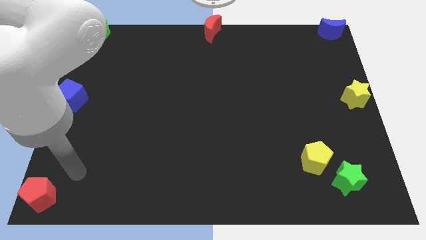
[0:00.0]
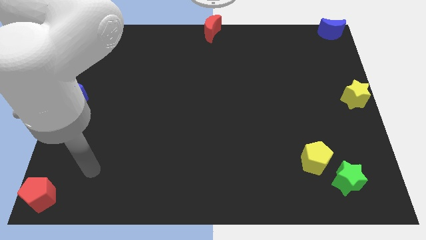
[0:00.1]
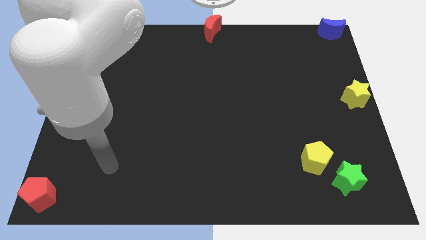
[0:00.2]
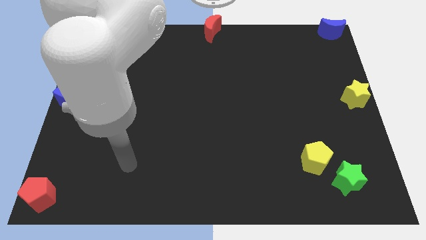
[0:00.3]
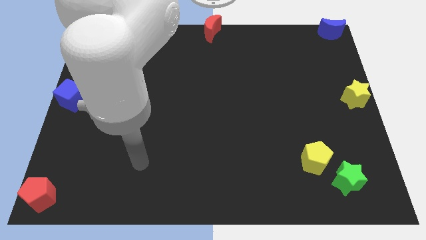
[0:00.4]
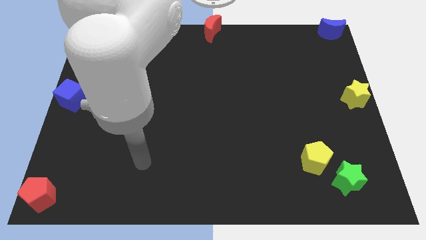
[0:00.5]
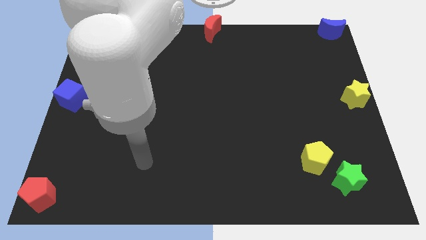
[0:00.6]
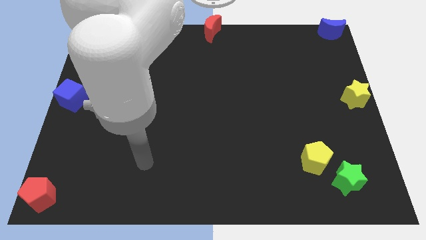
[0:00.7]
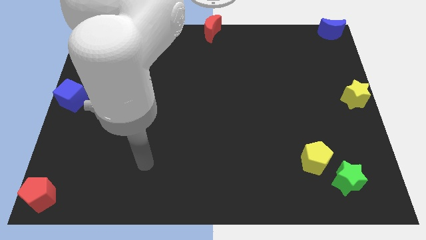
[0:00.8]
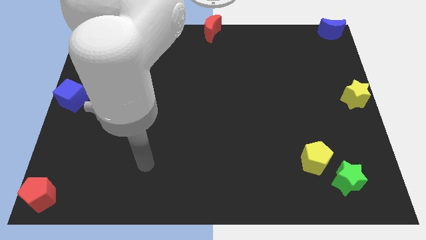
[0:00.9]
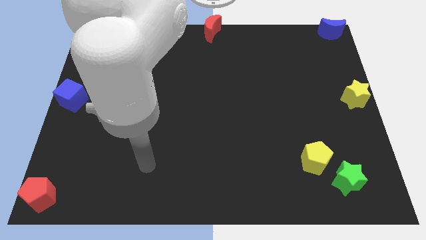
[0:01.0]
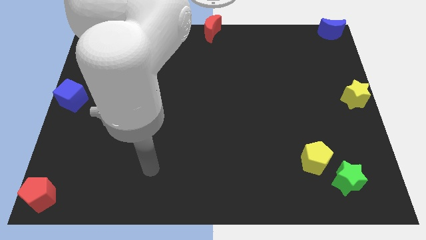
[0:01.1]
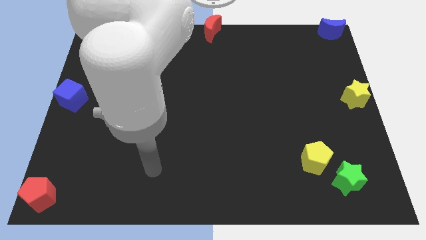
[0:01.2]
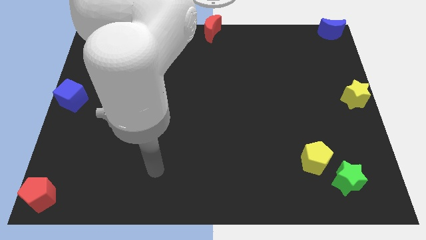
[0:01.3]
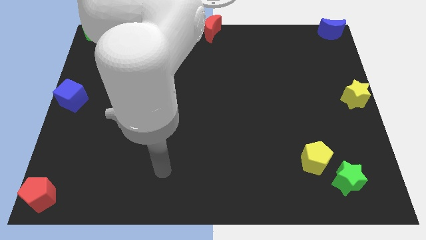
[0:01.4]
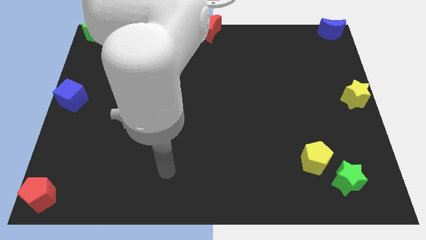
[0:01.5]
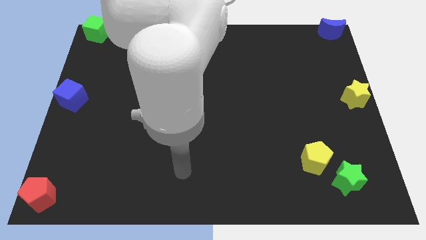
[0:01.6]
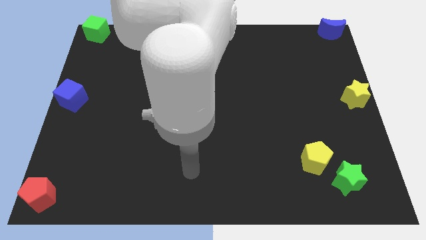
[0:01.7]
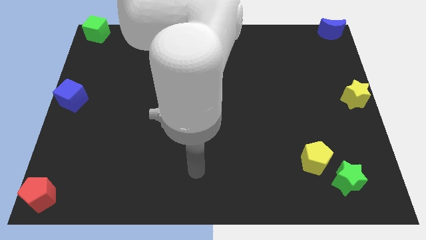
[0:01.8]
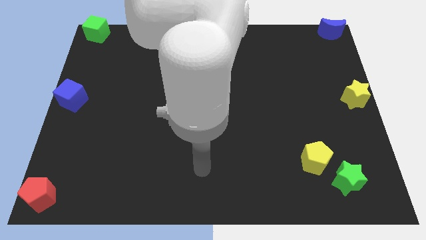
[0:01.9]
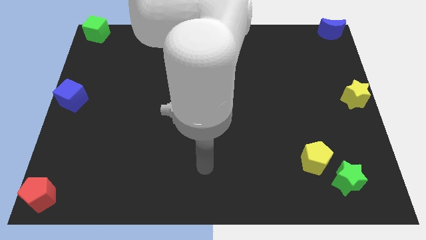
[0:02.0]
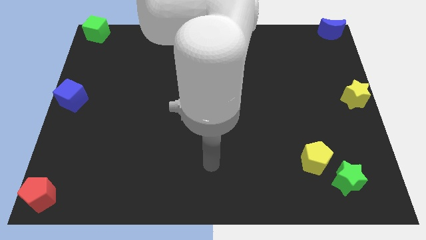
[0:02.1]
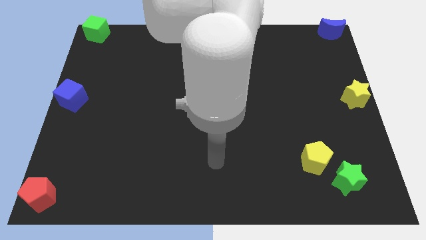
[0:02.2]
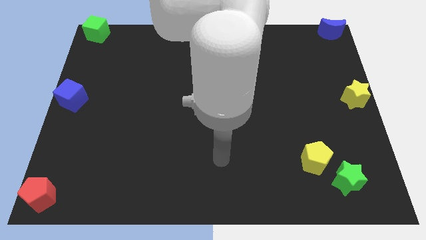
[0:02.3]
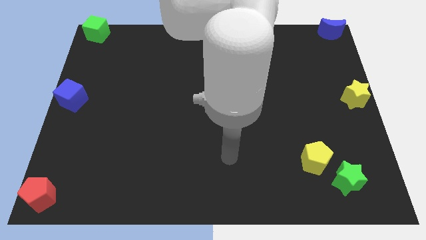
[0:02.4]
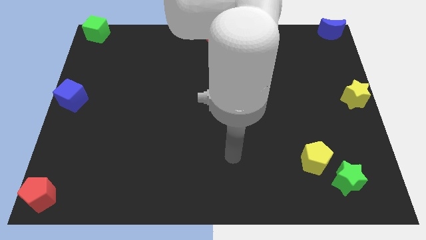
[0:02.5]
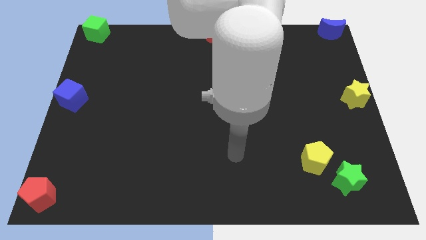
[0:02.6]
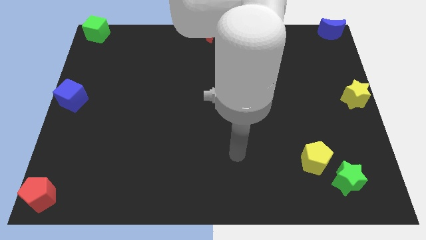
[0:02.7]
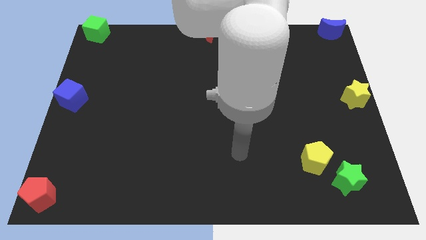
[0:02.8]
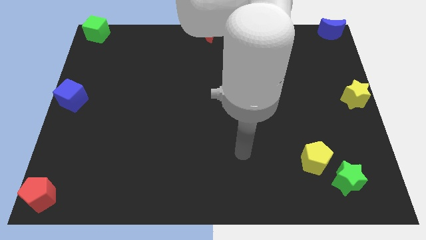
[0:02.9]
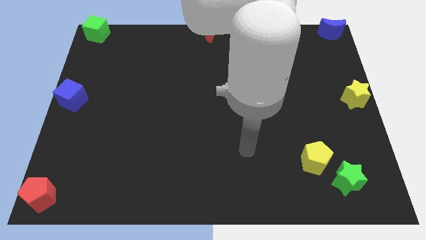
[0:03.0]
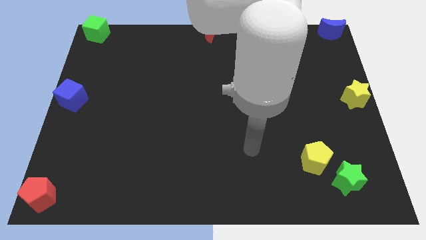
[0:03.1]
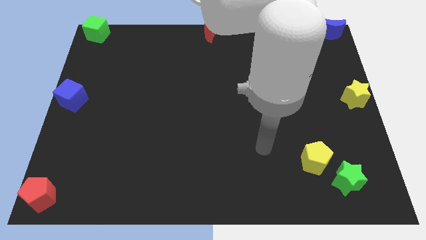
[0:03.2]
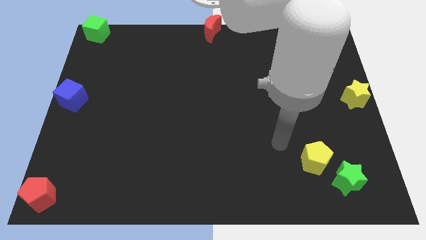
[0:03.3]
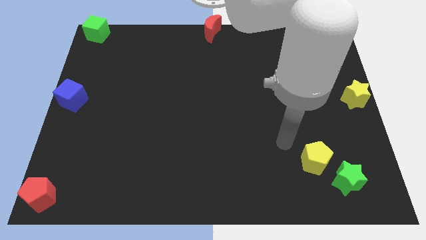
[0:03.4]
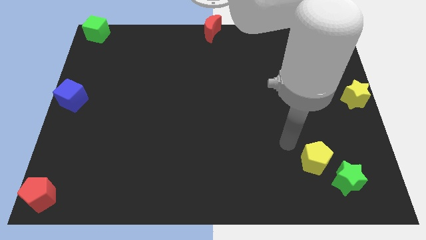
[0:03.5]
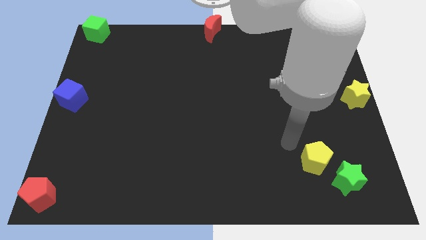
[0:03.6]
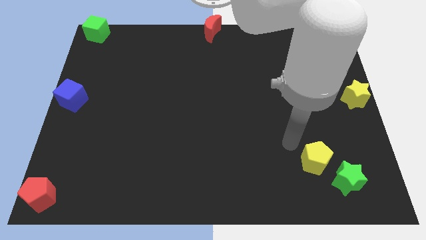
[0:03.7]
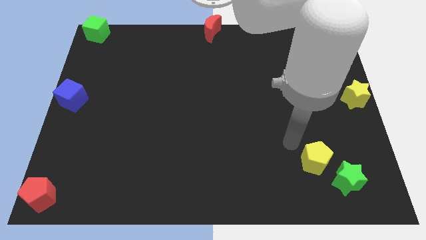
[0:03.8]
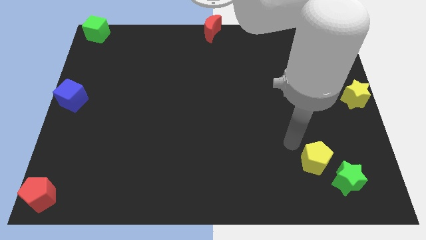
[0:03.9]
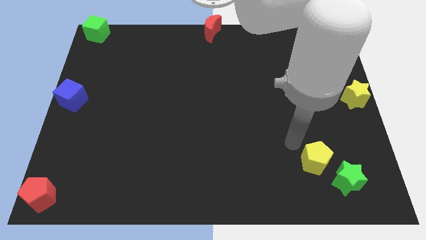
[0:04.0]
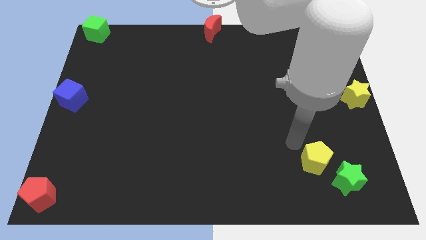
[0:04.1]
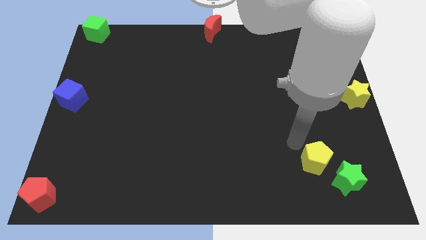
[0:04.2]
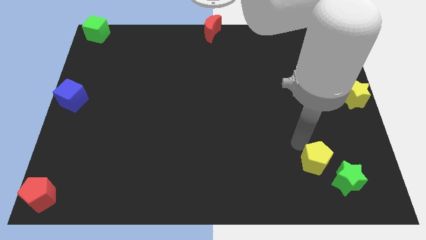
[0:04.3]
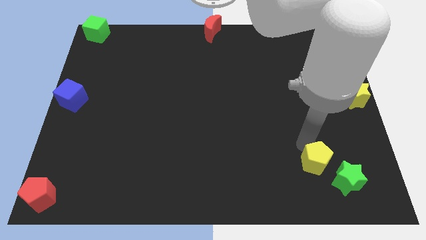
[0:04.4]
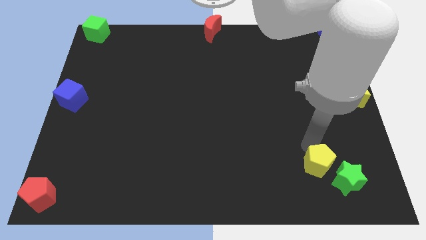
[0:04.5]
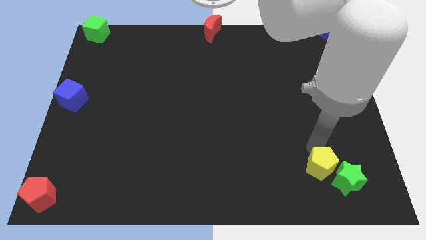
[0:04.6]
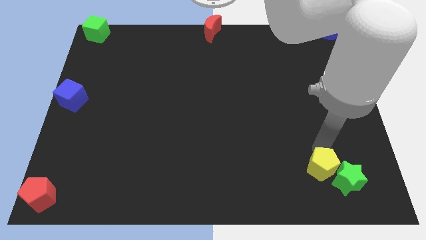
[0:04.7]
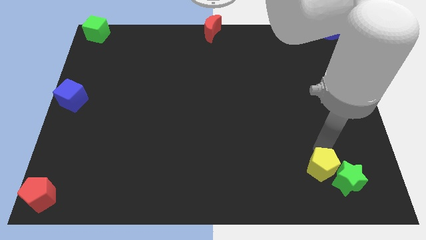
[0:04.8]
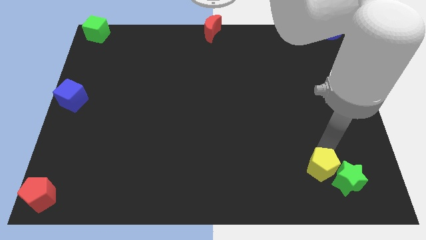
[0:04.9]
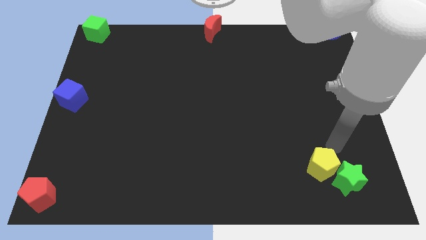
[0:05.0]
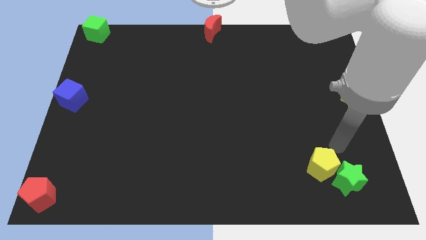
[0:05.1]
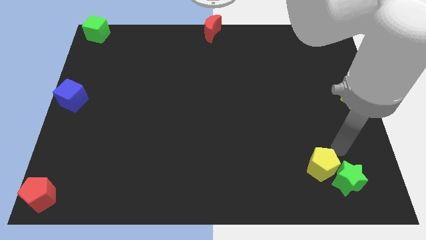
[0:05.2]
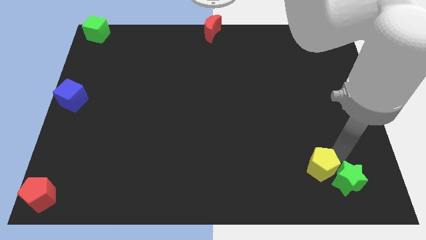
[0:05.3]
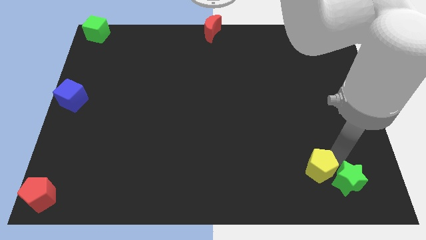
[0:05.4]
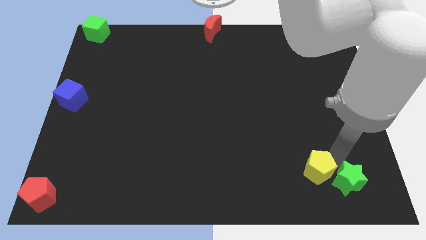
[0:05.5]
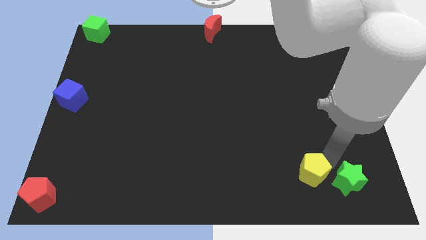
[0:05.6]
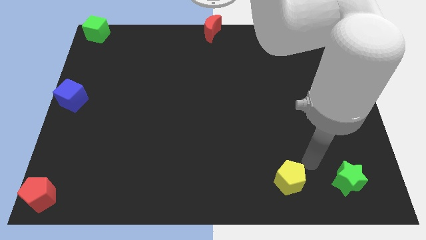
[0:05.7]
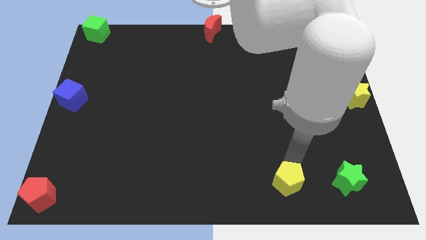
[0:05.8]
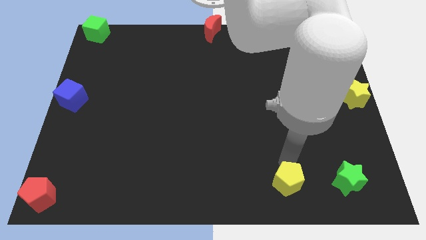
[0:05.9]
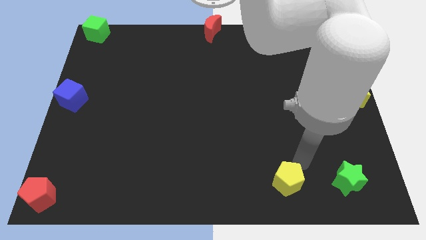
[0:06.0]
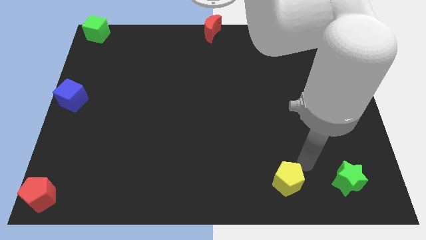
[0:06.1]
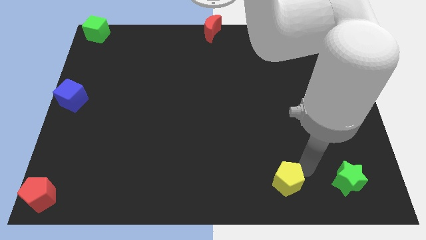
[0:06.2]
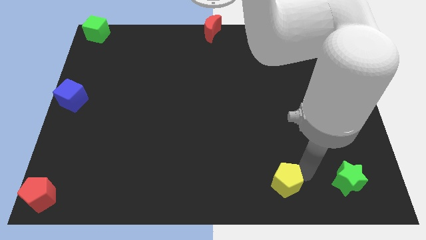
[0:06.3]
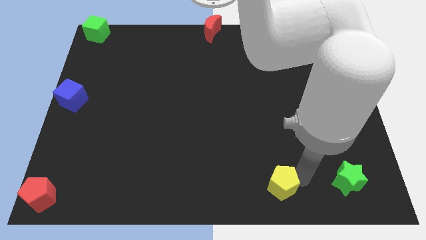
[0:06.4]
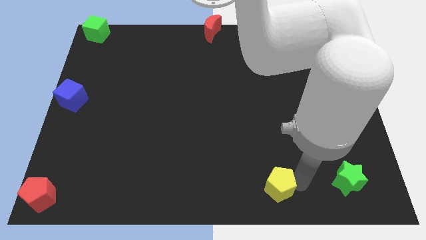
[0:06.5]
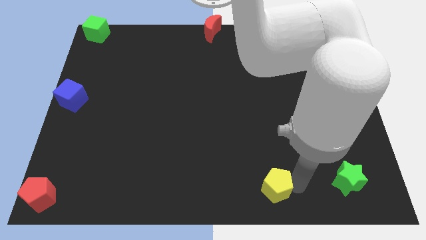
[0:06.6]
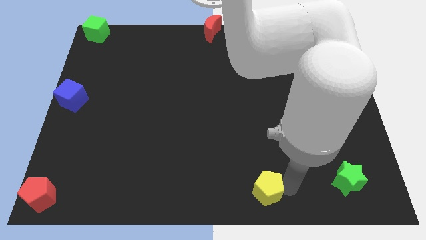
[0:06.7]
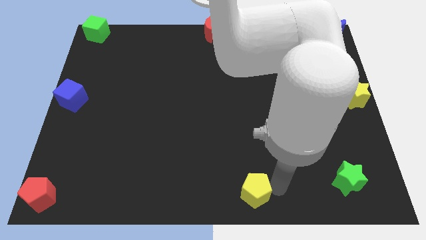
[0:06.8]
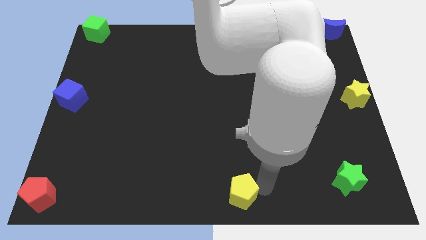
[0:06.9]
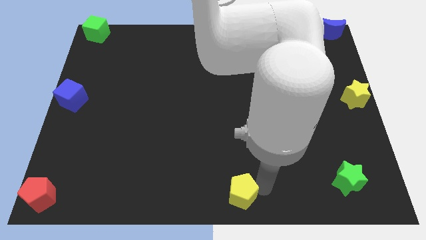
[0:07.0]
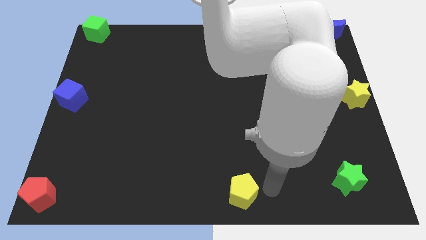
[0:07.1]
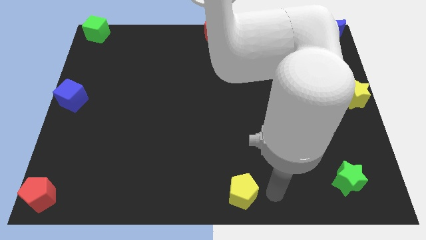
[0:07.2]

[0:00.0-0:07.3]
push the yellow pentagon to the bottom center of the board

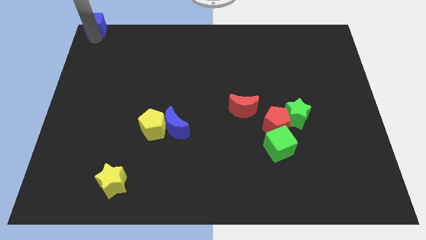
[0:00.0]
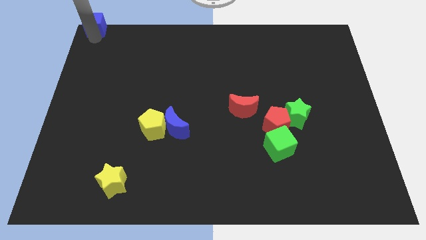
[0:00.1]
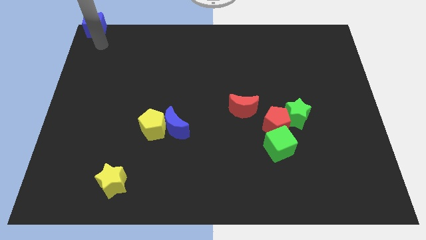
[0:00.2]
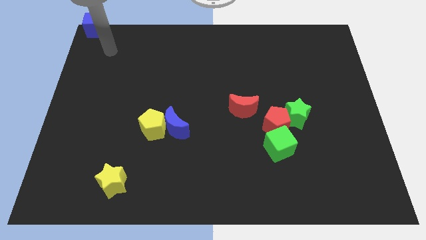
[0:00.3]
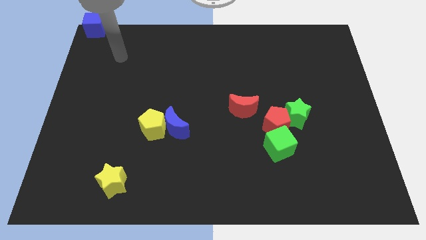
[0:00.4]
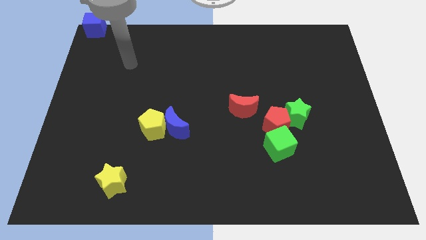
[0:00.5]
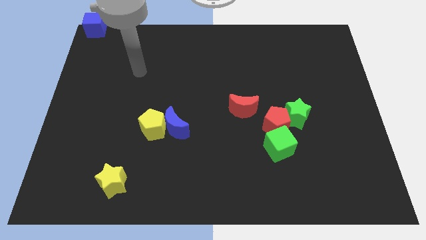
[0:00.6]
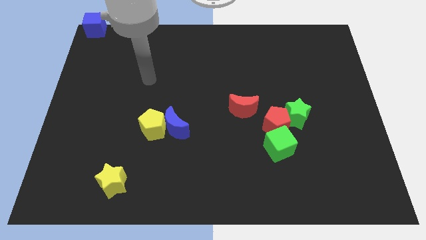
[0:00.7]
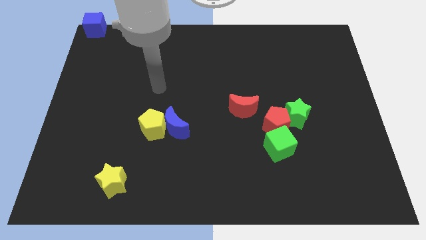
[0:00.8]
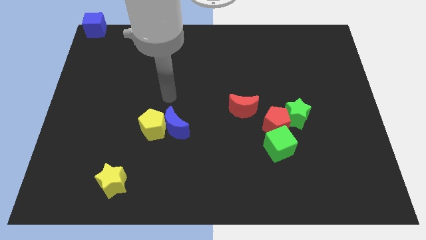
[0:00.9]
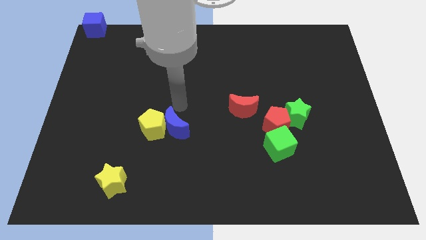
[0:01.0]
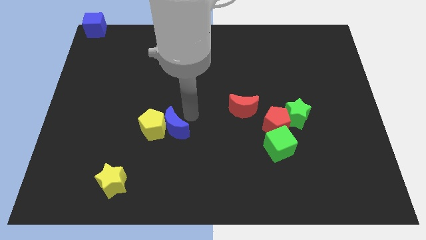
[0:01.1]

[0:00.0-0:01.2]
move the arm to the center of the board

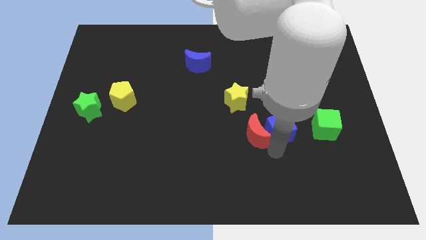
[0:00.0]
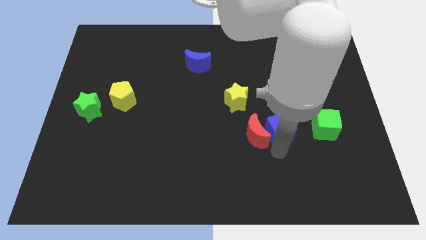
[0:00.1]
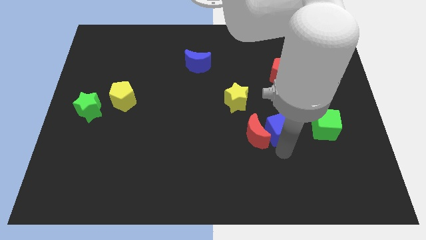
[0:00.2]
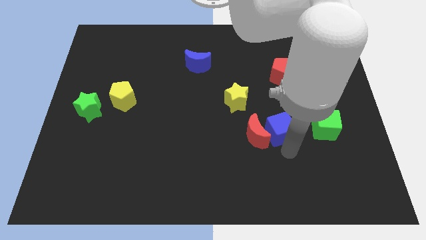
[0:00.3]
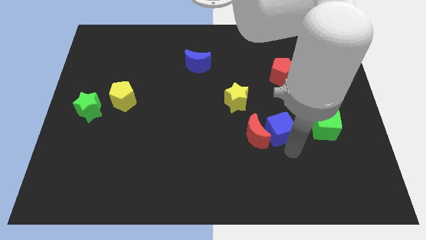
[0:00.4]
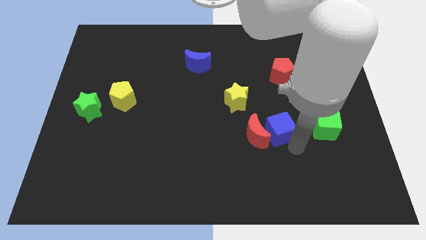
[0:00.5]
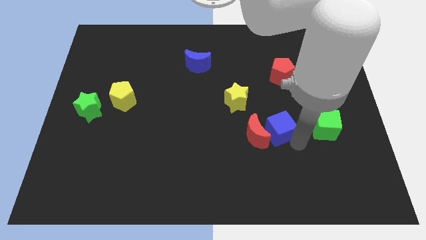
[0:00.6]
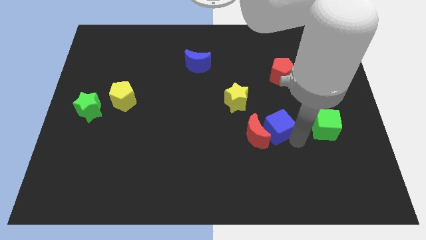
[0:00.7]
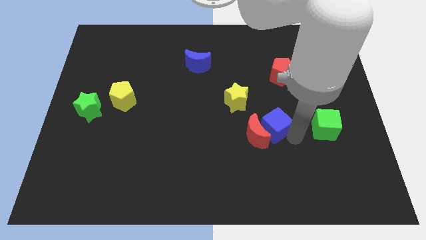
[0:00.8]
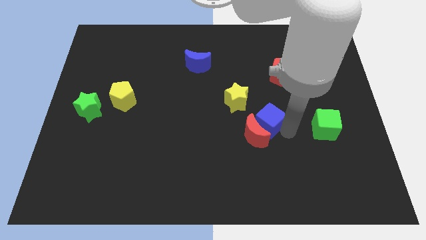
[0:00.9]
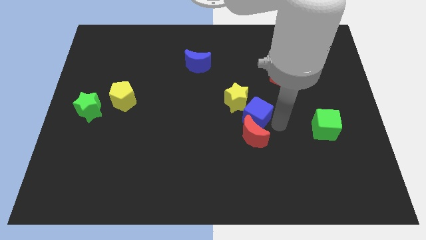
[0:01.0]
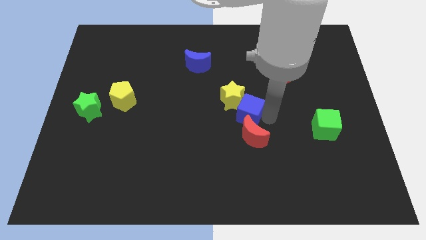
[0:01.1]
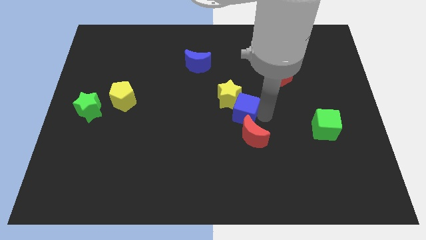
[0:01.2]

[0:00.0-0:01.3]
push blue cube towards yellow star
